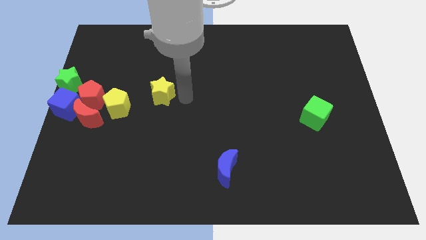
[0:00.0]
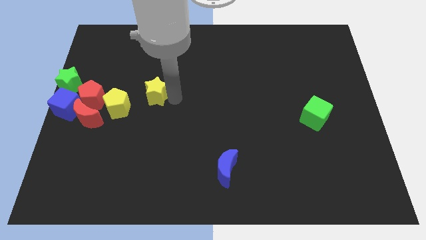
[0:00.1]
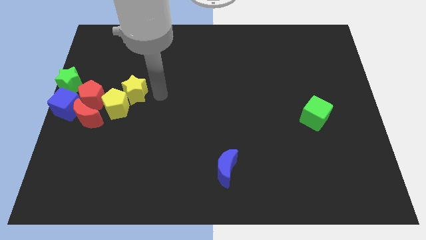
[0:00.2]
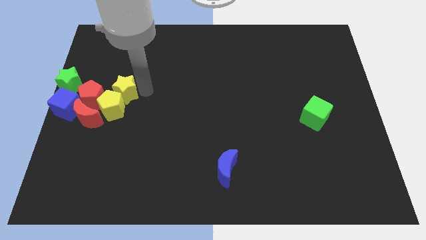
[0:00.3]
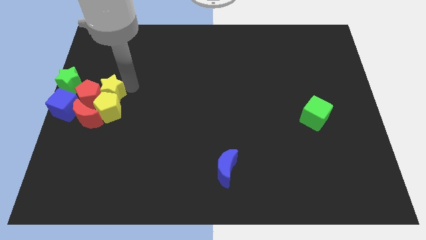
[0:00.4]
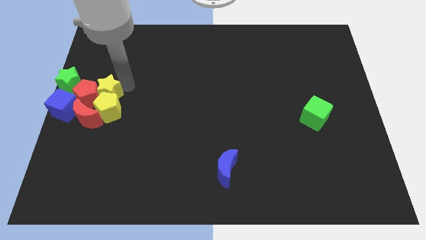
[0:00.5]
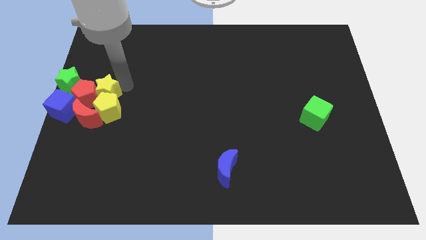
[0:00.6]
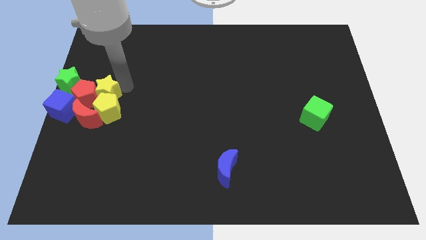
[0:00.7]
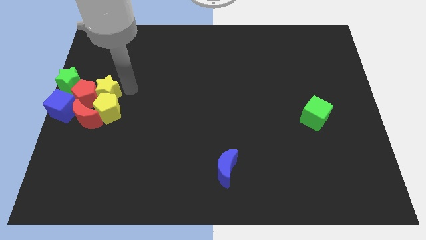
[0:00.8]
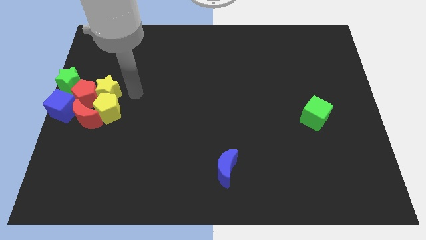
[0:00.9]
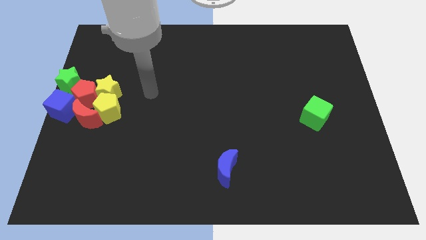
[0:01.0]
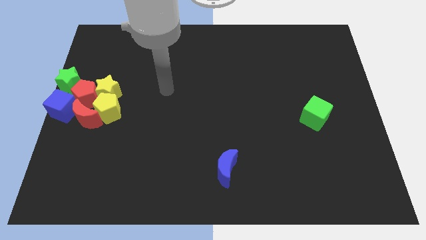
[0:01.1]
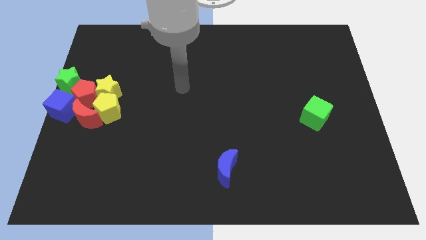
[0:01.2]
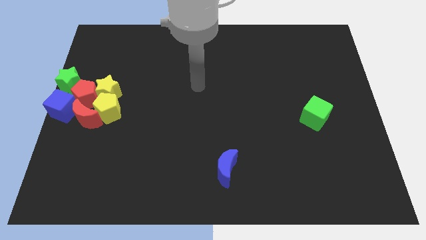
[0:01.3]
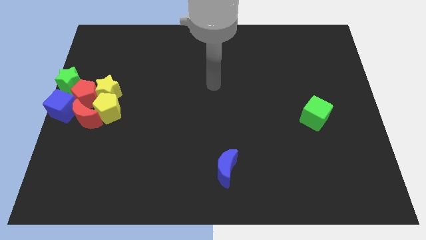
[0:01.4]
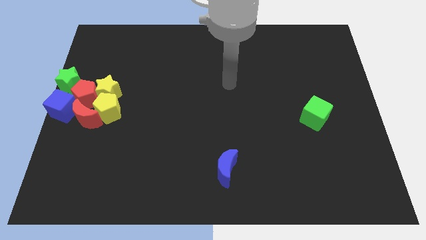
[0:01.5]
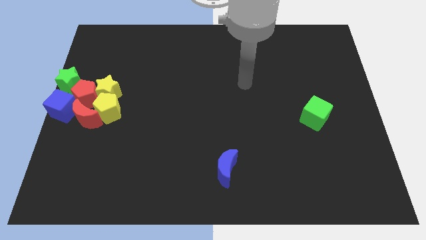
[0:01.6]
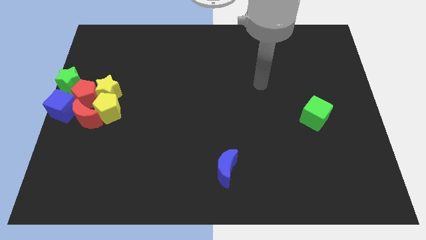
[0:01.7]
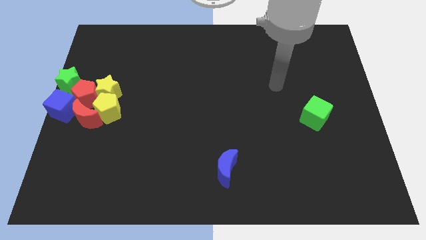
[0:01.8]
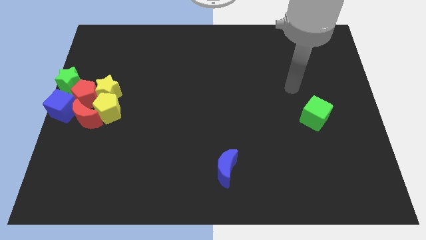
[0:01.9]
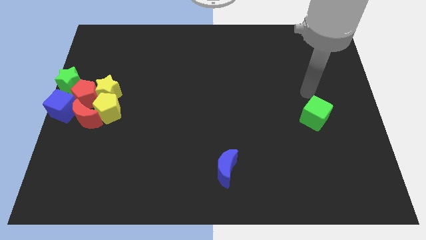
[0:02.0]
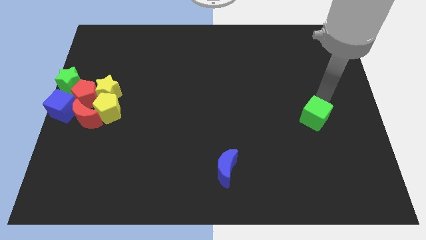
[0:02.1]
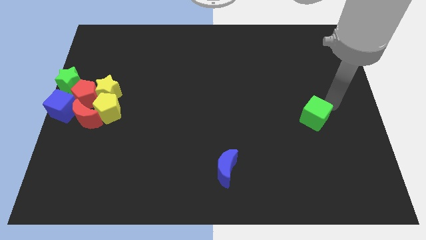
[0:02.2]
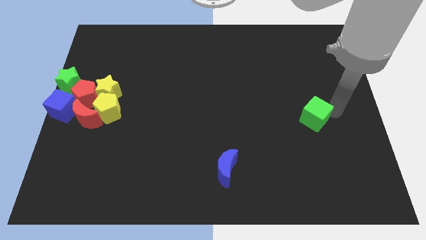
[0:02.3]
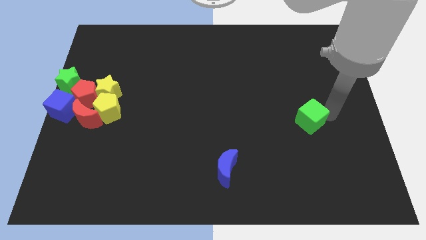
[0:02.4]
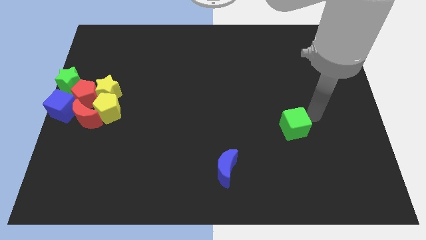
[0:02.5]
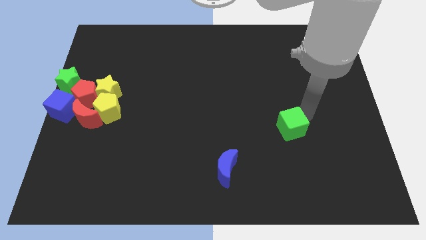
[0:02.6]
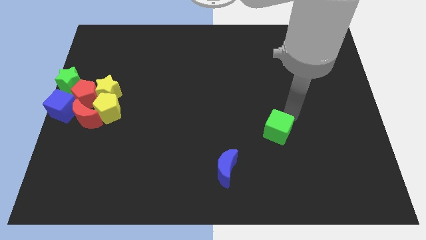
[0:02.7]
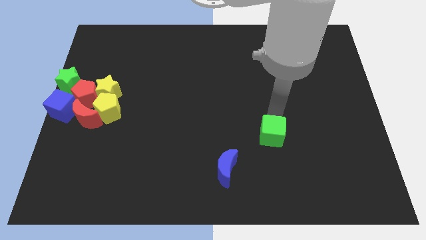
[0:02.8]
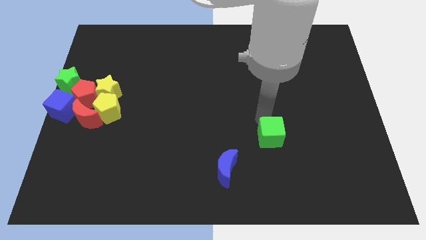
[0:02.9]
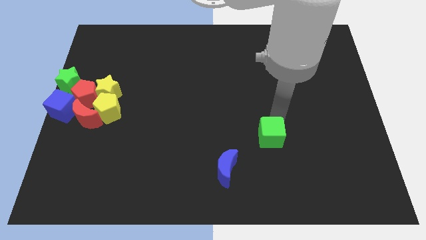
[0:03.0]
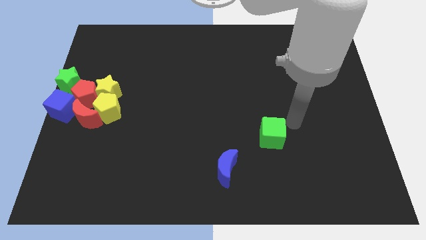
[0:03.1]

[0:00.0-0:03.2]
moon your arm towards the green cube

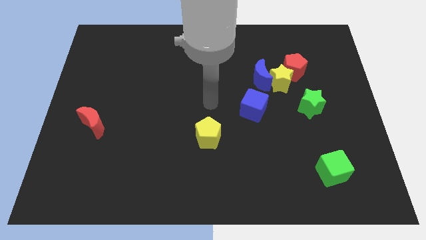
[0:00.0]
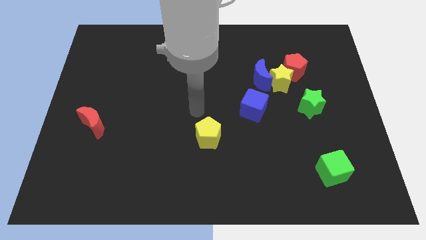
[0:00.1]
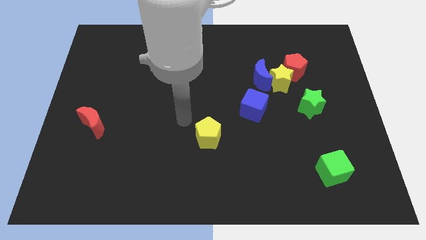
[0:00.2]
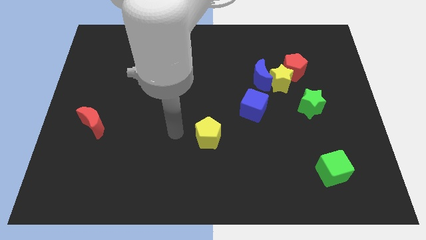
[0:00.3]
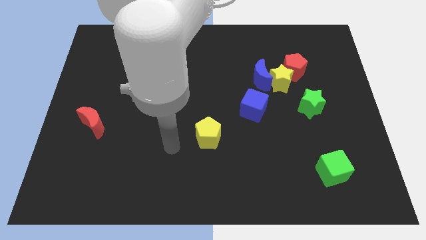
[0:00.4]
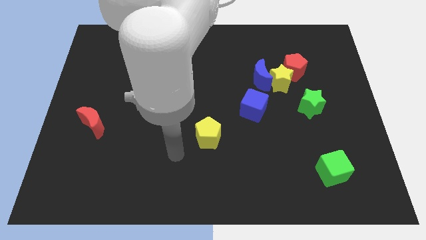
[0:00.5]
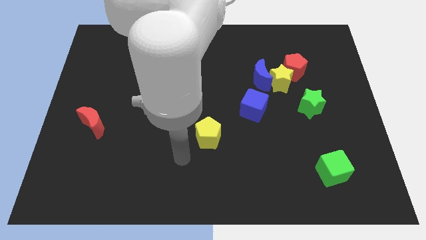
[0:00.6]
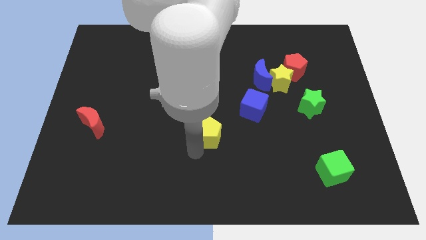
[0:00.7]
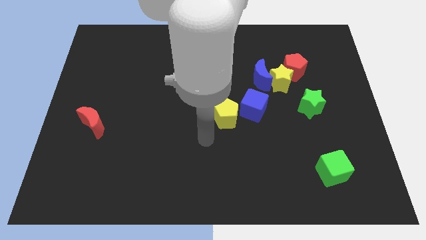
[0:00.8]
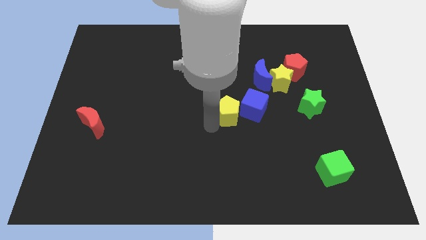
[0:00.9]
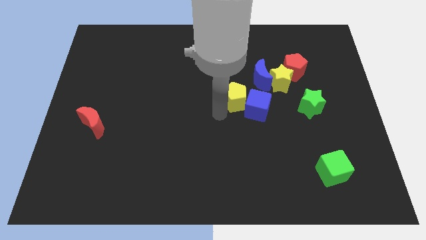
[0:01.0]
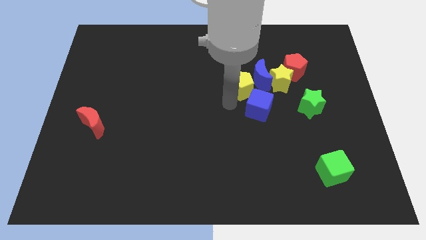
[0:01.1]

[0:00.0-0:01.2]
move the yellow pentagon to the left of the blue cube

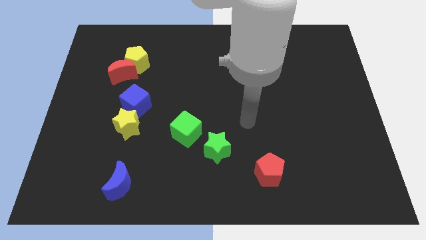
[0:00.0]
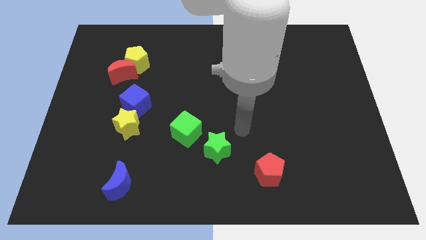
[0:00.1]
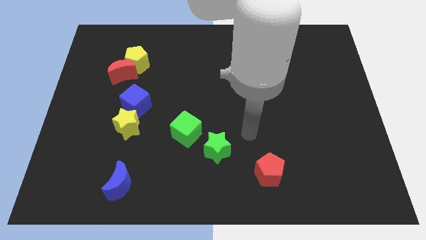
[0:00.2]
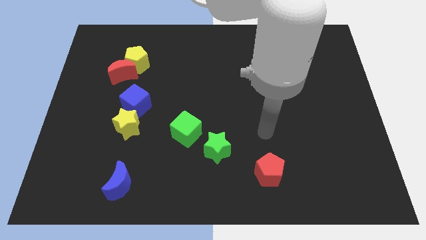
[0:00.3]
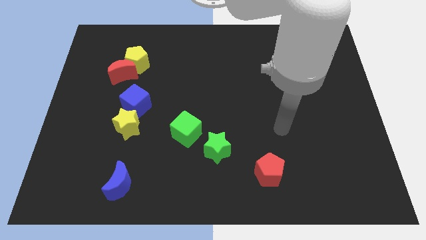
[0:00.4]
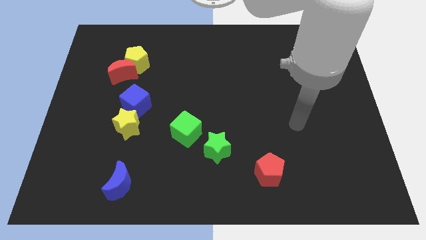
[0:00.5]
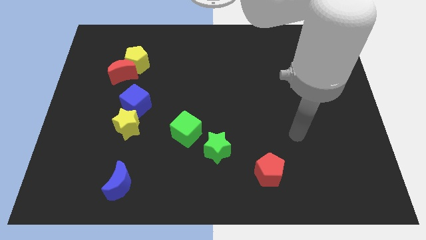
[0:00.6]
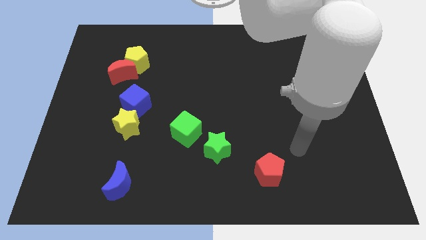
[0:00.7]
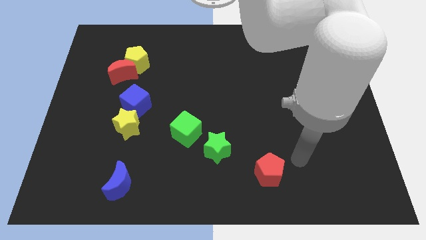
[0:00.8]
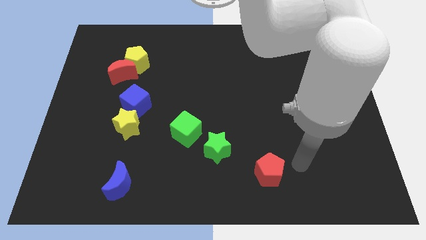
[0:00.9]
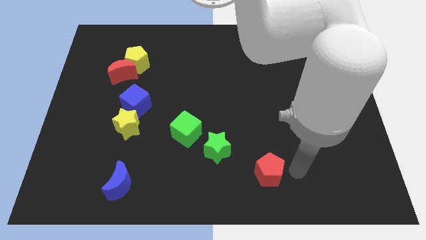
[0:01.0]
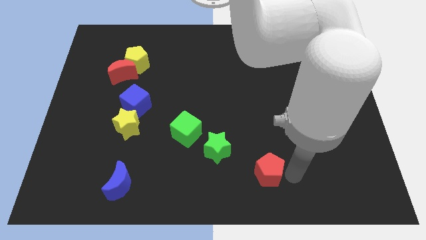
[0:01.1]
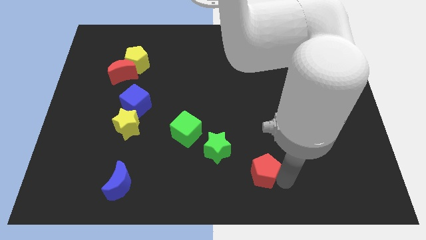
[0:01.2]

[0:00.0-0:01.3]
place your arm at the right of the red pentagon

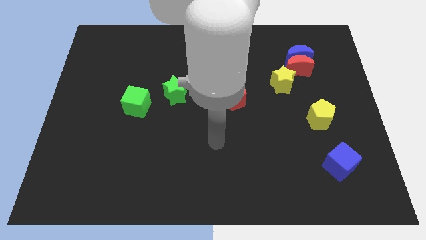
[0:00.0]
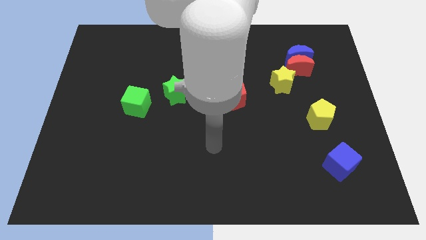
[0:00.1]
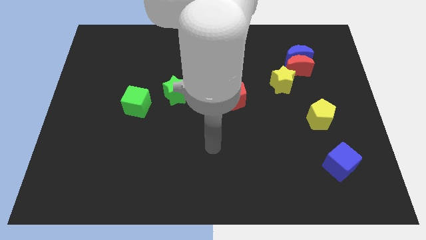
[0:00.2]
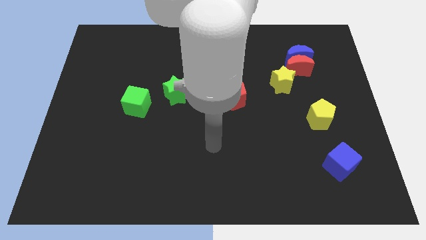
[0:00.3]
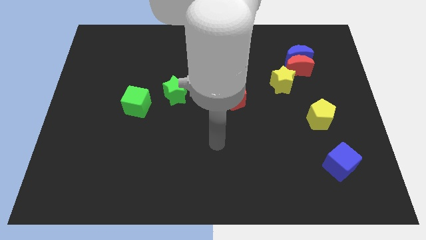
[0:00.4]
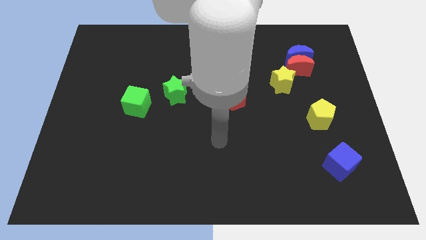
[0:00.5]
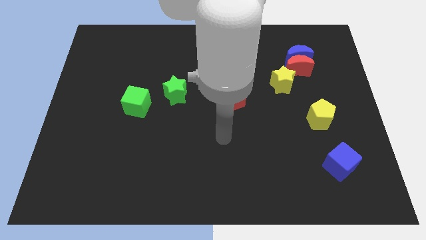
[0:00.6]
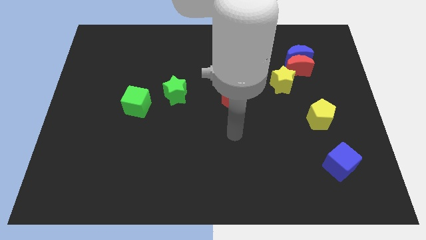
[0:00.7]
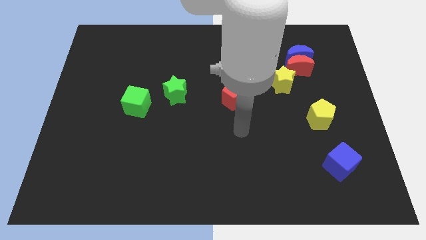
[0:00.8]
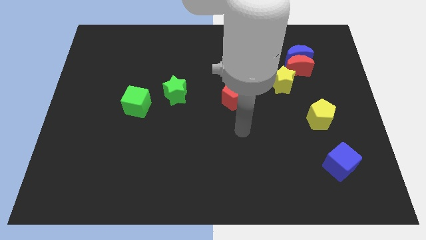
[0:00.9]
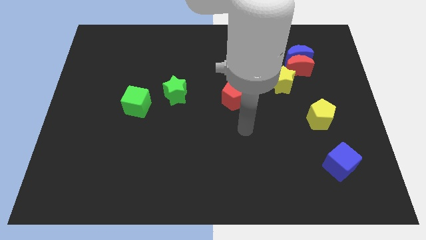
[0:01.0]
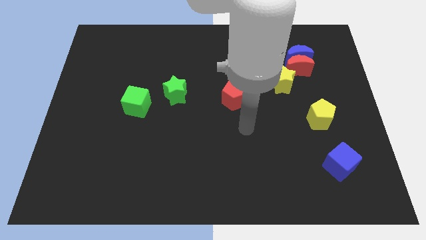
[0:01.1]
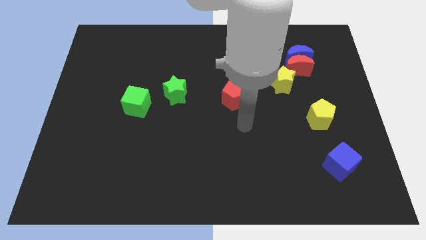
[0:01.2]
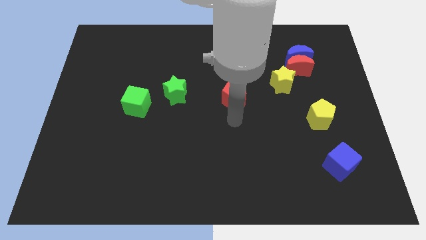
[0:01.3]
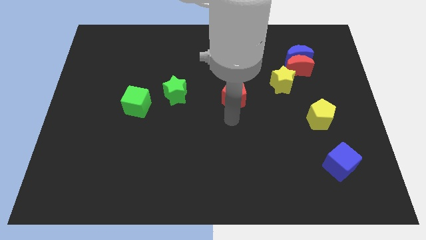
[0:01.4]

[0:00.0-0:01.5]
move robot arm towards red pentagon

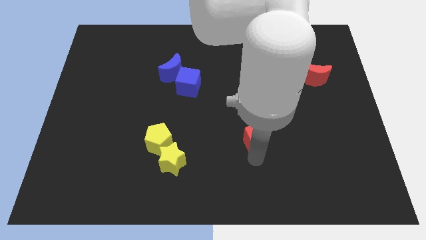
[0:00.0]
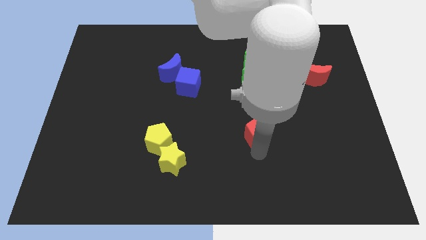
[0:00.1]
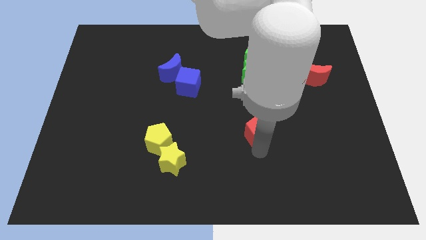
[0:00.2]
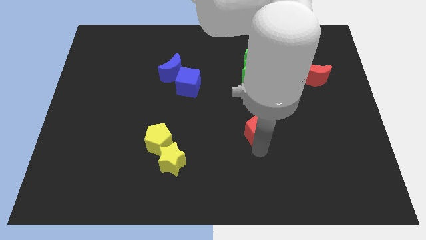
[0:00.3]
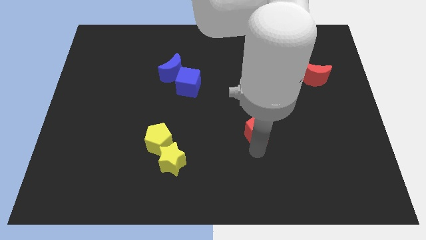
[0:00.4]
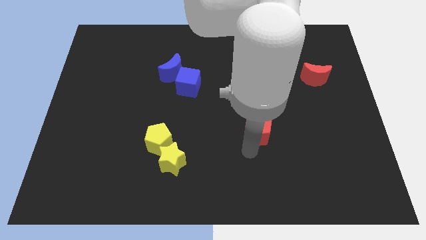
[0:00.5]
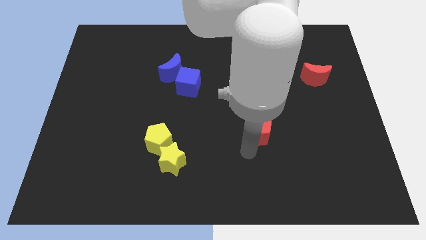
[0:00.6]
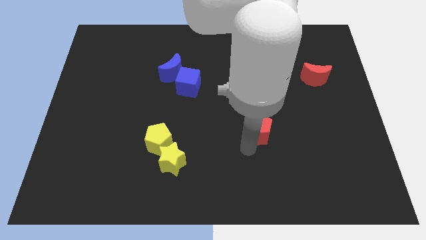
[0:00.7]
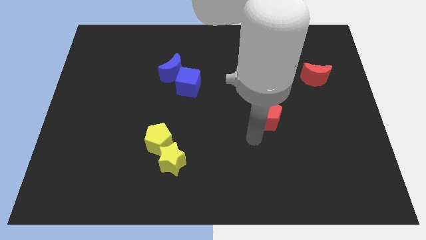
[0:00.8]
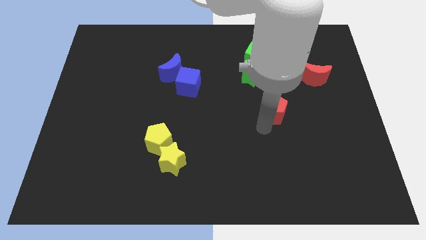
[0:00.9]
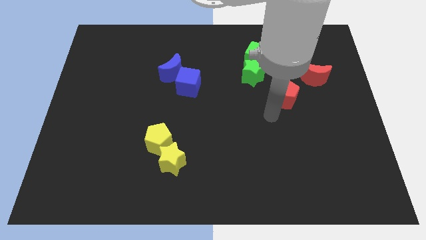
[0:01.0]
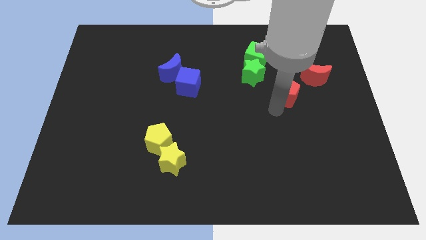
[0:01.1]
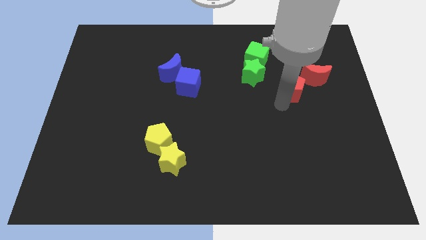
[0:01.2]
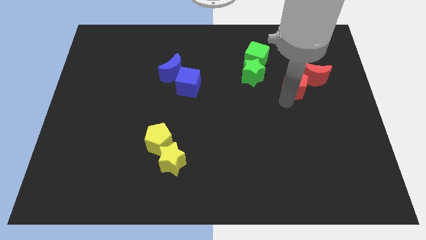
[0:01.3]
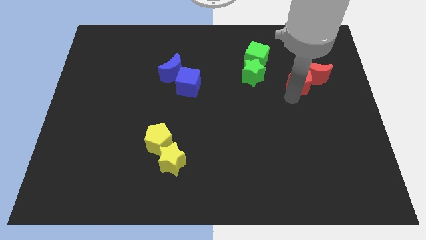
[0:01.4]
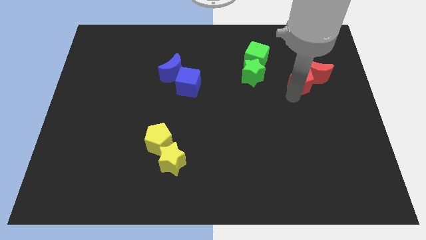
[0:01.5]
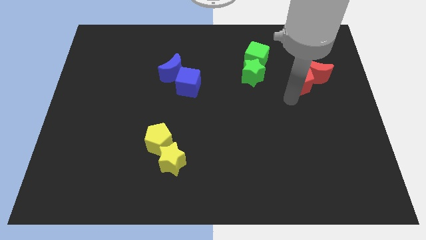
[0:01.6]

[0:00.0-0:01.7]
move the red pentagon into the red moon
